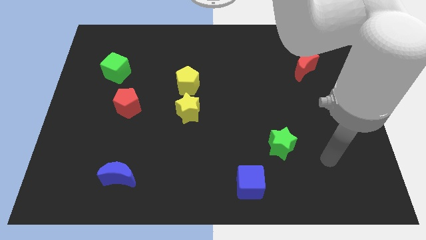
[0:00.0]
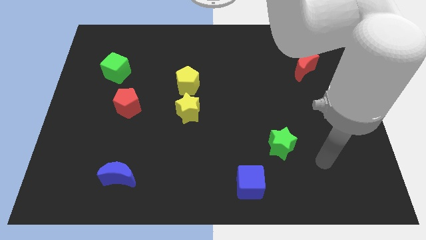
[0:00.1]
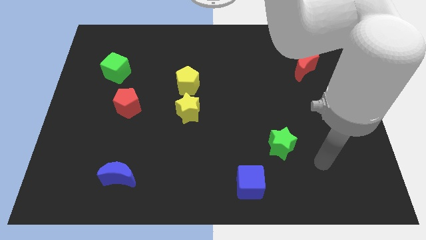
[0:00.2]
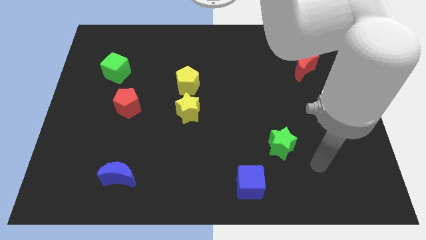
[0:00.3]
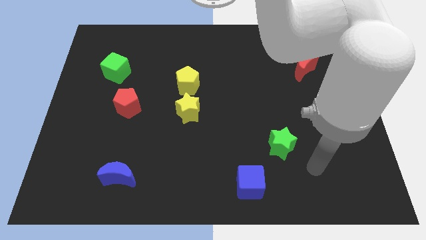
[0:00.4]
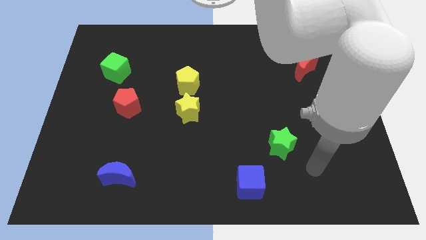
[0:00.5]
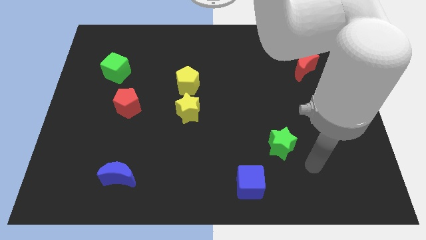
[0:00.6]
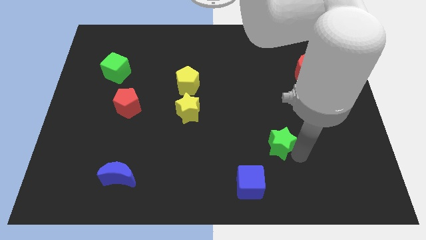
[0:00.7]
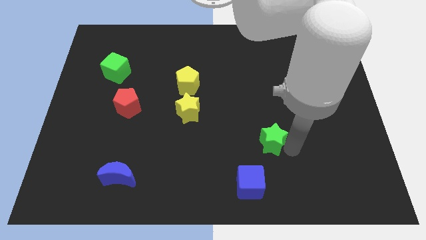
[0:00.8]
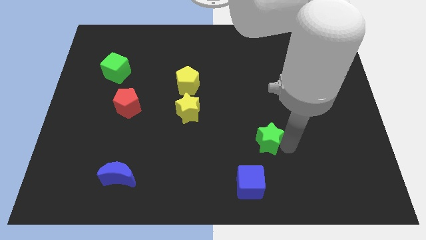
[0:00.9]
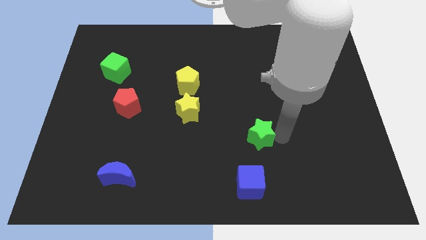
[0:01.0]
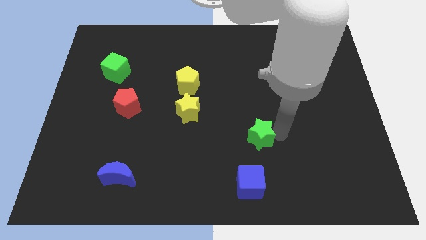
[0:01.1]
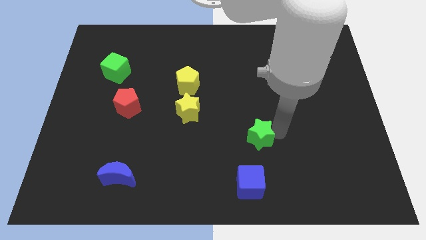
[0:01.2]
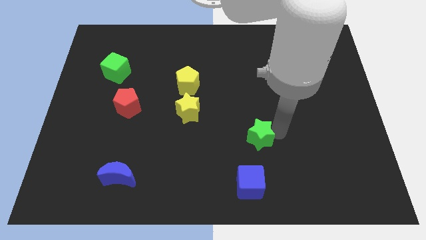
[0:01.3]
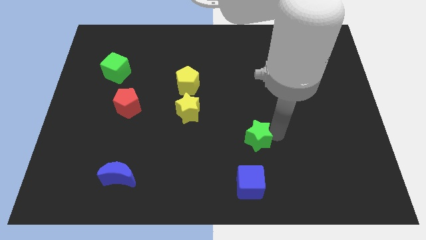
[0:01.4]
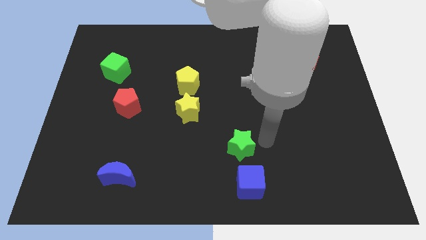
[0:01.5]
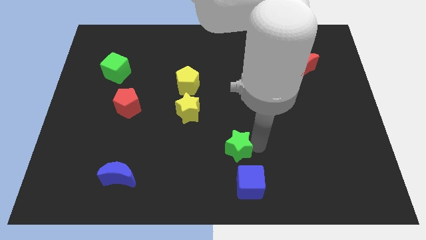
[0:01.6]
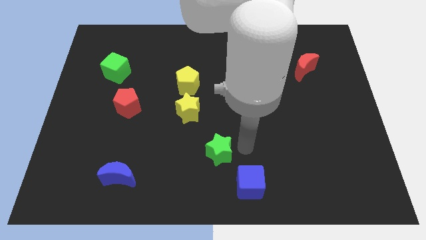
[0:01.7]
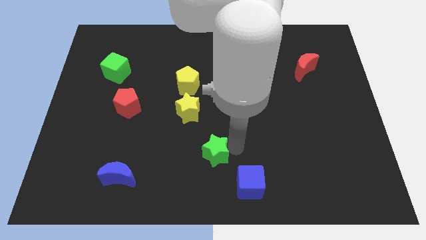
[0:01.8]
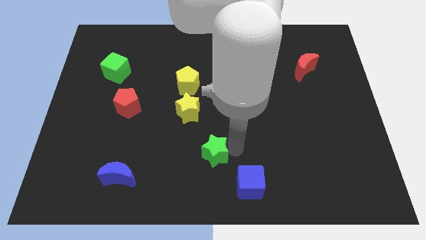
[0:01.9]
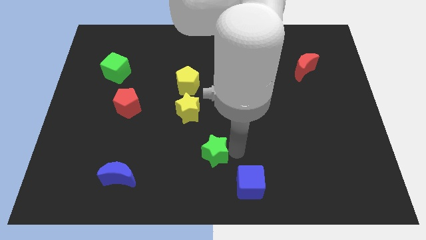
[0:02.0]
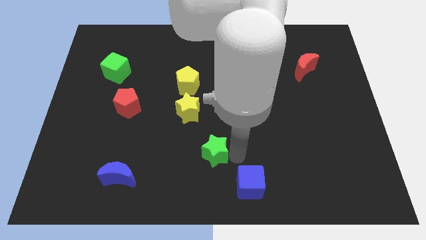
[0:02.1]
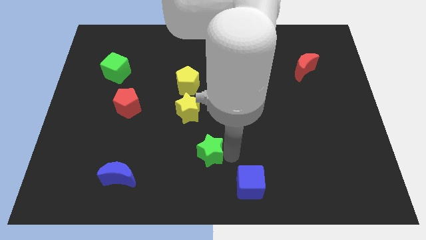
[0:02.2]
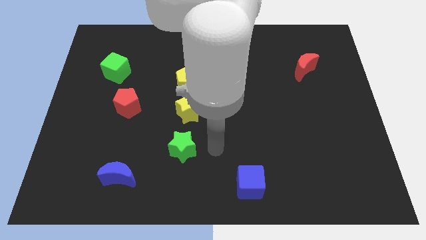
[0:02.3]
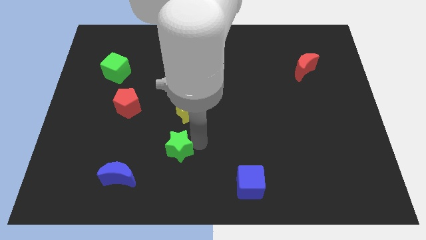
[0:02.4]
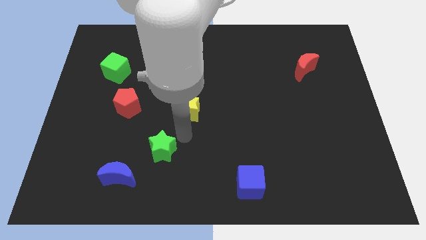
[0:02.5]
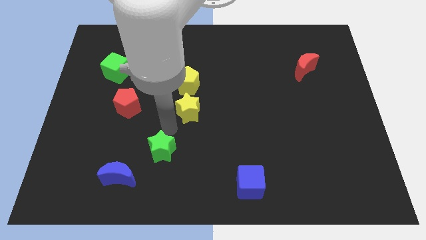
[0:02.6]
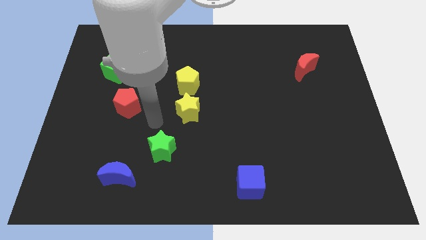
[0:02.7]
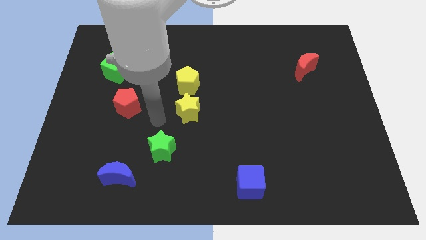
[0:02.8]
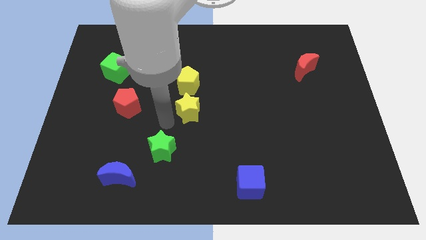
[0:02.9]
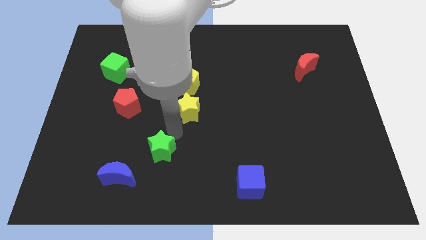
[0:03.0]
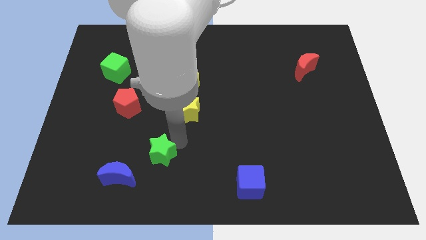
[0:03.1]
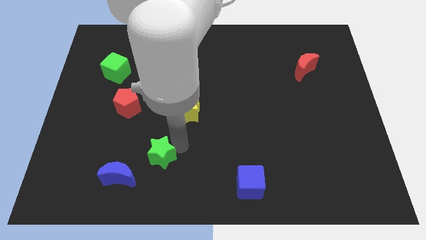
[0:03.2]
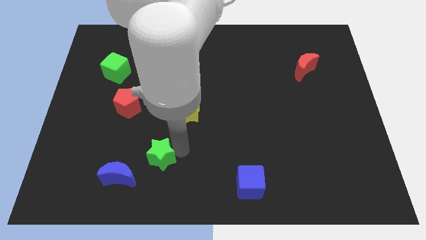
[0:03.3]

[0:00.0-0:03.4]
push the green star to the left side of the board

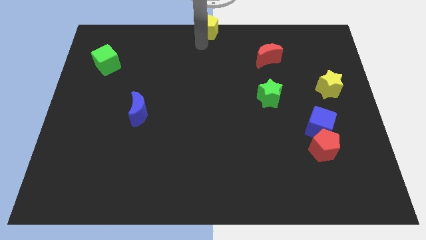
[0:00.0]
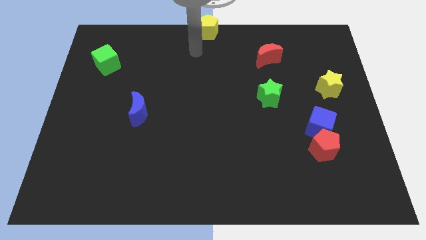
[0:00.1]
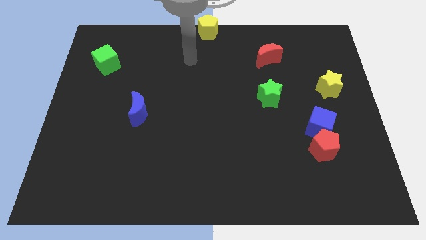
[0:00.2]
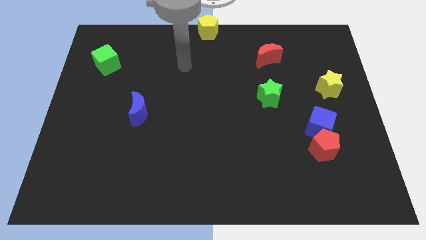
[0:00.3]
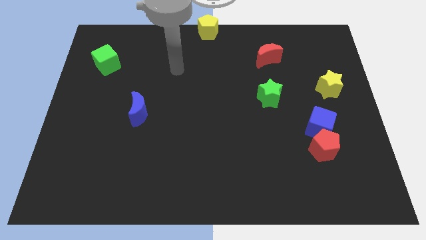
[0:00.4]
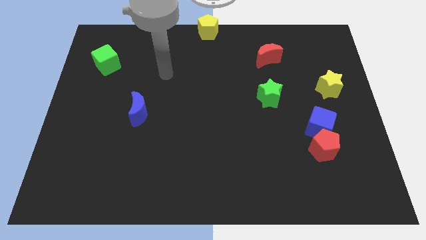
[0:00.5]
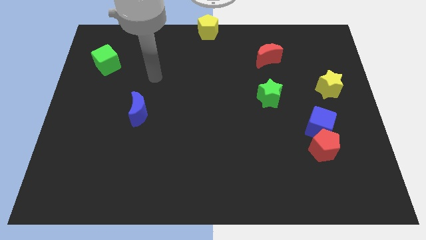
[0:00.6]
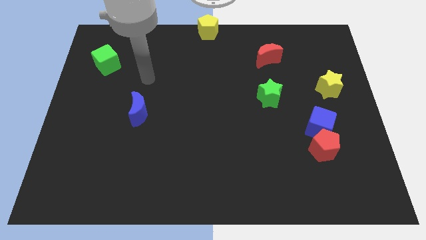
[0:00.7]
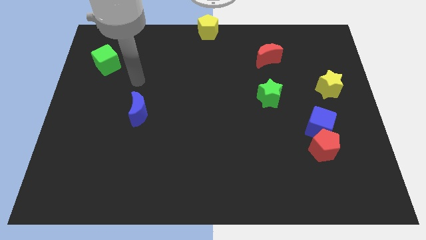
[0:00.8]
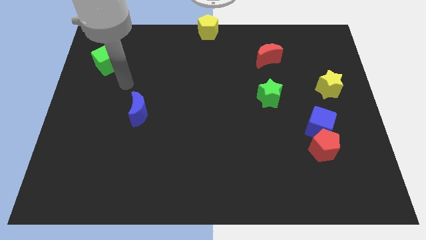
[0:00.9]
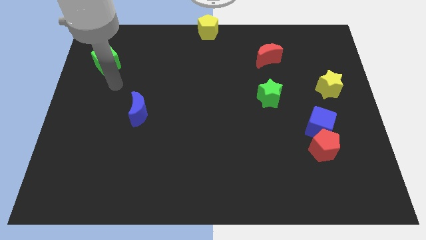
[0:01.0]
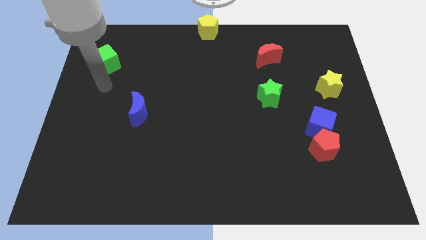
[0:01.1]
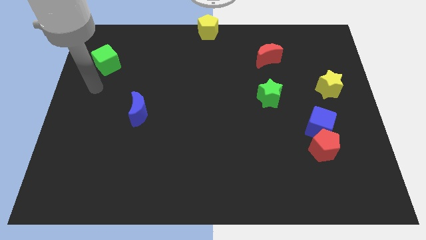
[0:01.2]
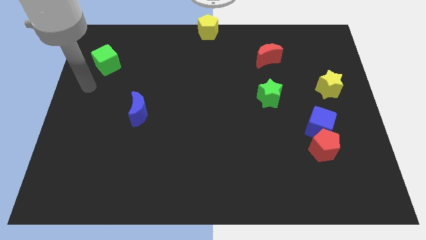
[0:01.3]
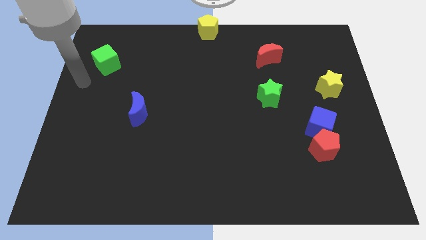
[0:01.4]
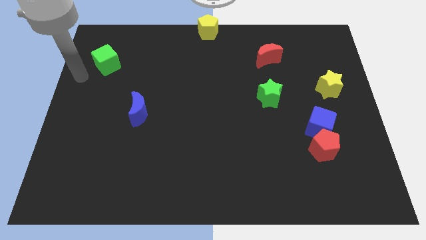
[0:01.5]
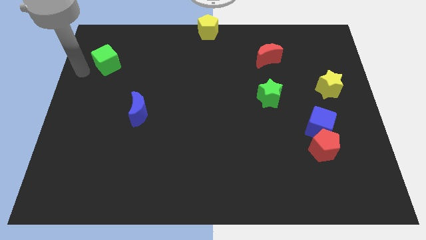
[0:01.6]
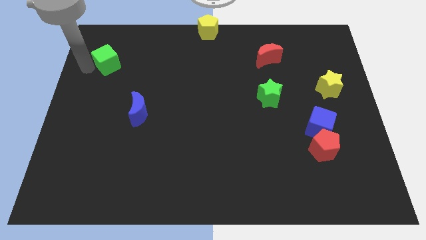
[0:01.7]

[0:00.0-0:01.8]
slide your arm to the left side of the green cube

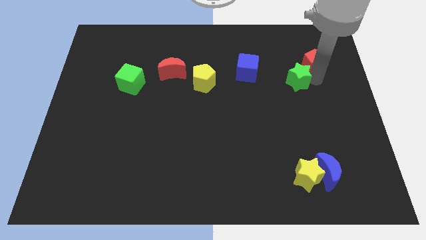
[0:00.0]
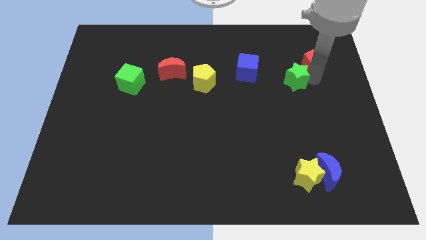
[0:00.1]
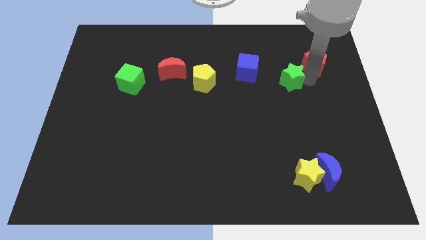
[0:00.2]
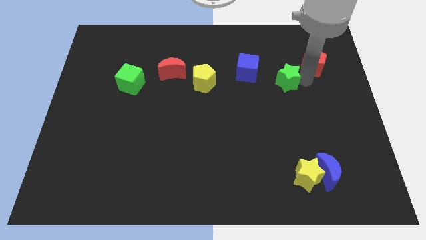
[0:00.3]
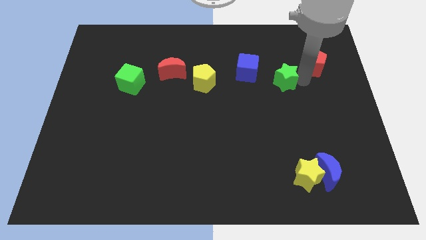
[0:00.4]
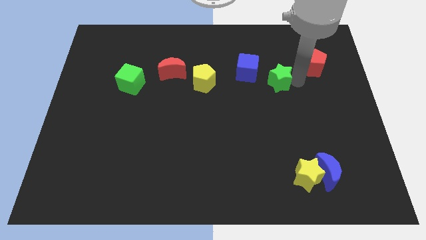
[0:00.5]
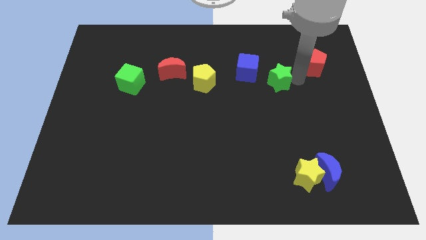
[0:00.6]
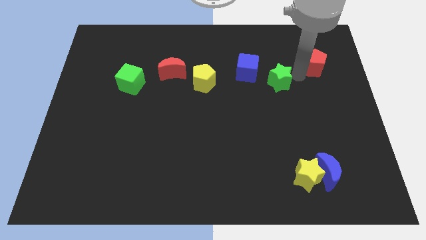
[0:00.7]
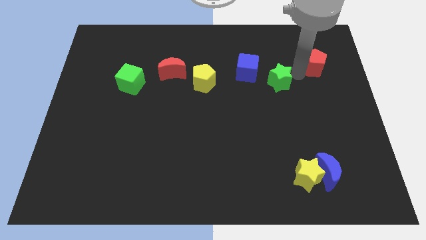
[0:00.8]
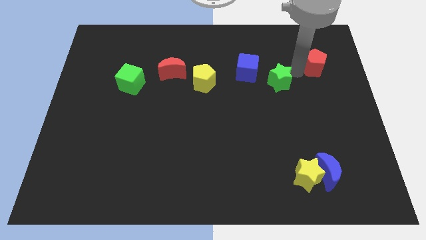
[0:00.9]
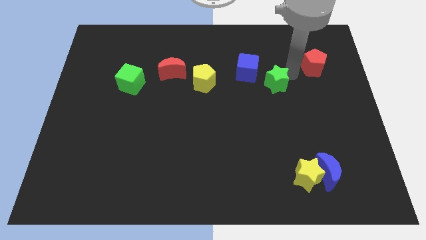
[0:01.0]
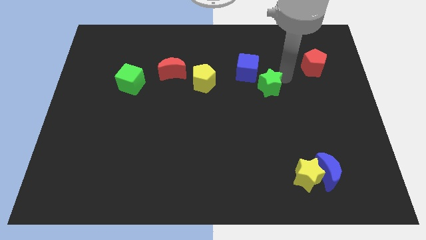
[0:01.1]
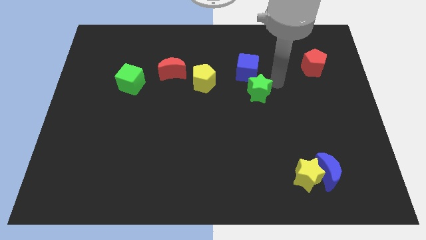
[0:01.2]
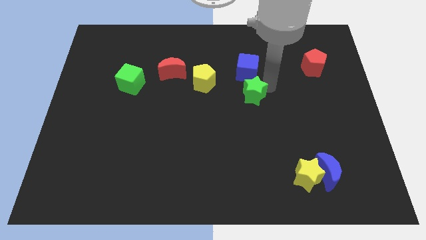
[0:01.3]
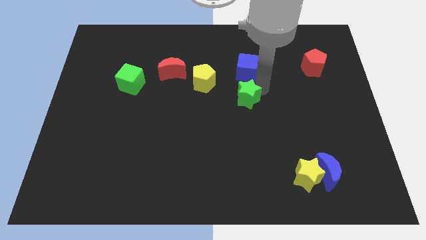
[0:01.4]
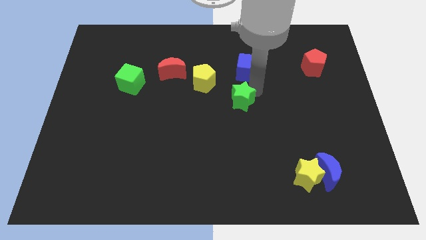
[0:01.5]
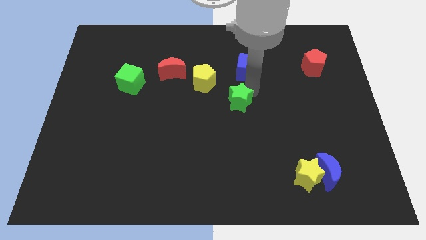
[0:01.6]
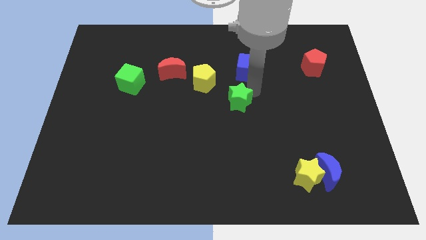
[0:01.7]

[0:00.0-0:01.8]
place the green star below the blue cube

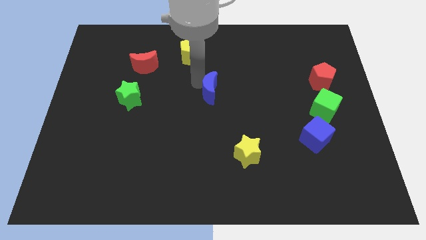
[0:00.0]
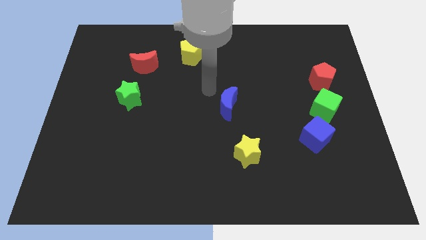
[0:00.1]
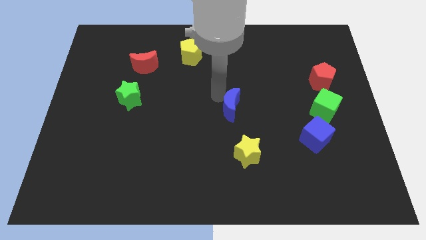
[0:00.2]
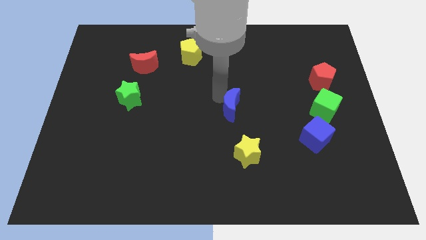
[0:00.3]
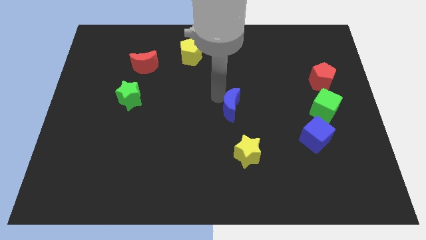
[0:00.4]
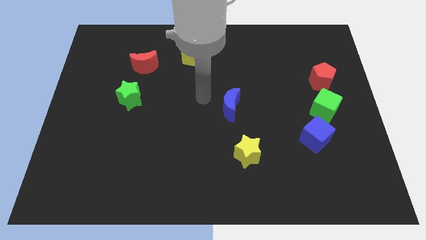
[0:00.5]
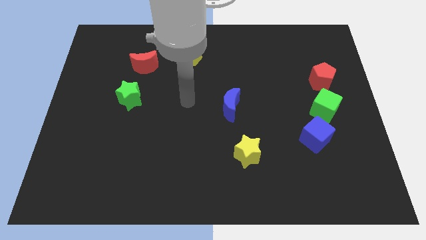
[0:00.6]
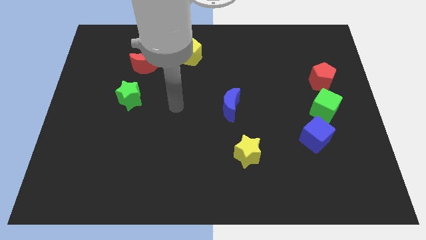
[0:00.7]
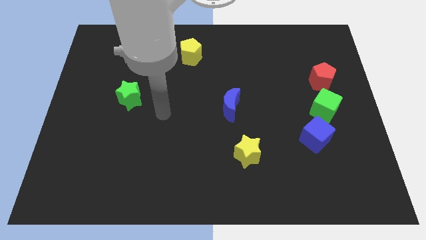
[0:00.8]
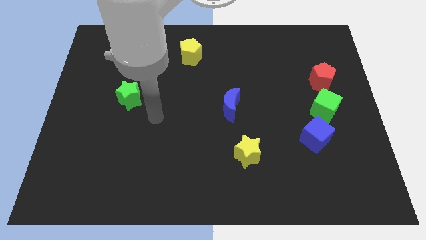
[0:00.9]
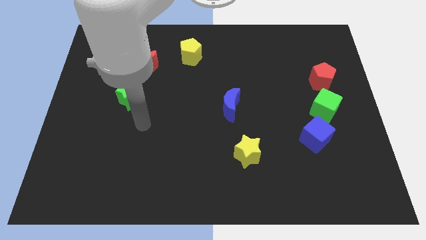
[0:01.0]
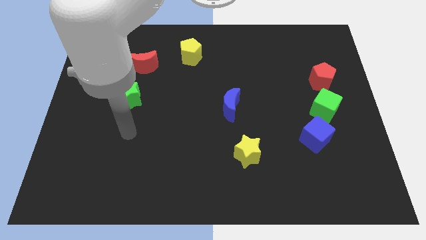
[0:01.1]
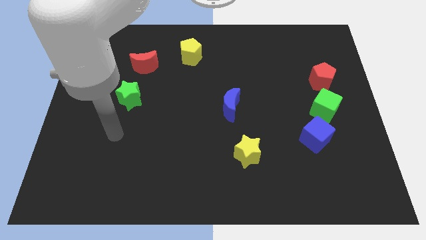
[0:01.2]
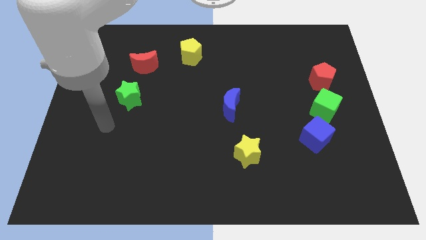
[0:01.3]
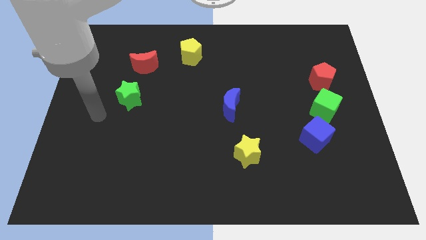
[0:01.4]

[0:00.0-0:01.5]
move the blue crescent diagonally to the top right side of the yellow star

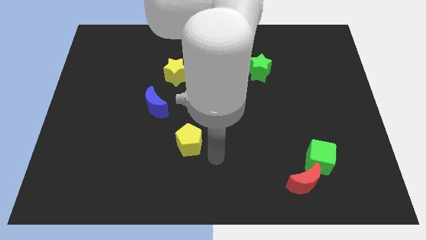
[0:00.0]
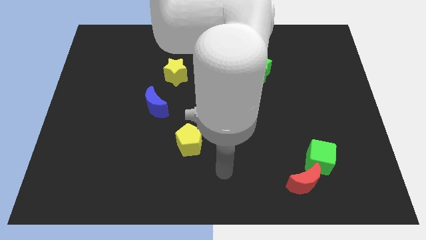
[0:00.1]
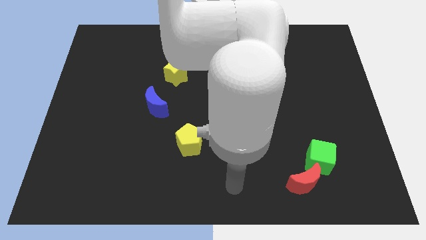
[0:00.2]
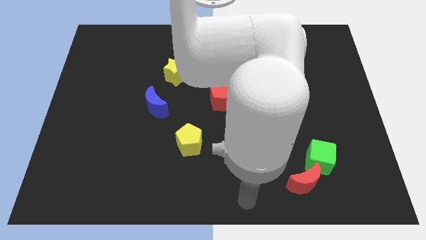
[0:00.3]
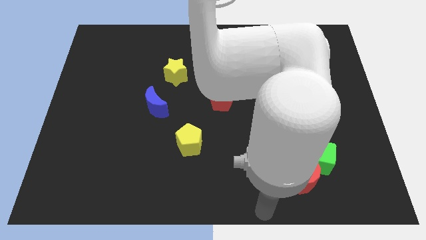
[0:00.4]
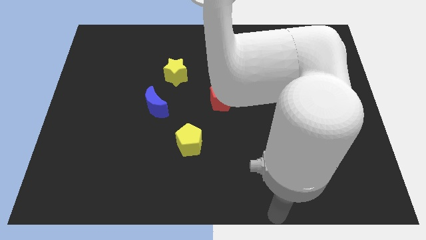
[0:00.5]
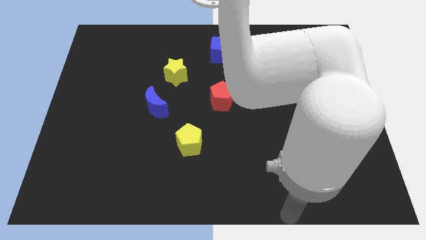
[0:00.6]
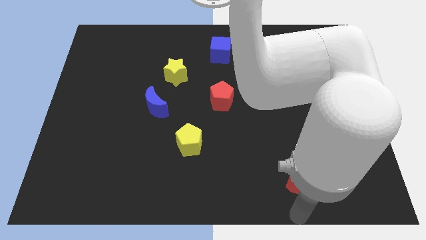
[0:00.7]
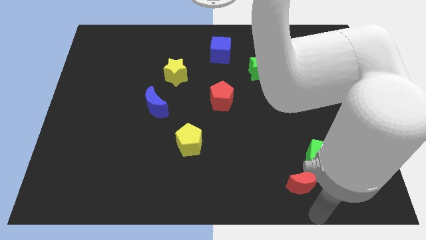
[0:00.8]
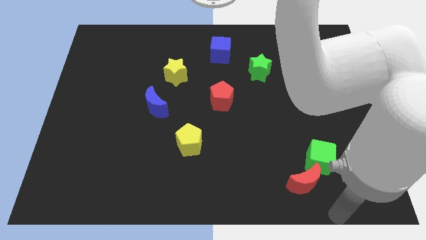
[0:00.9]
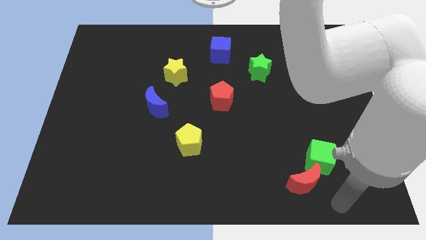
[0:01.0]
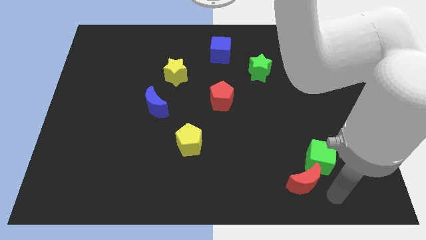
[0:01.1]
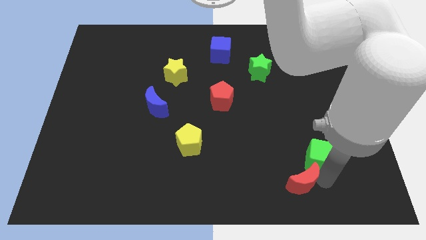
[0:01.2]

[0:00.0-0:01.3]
place your arm to the right of red moon
